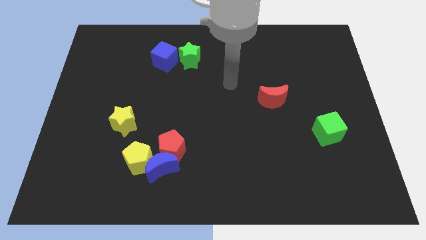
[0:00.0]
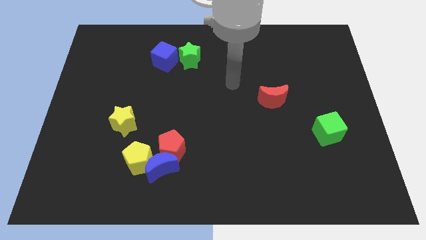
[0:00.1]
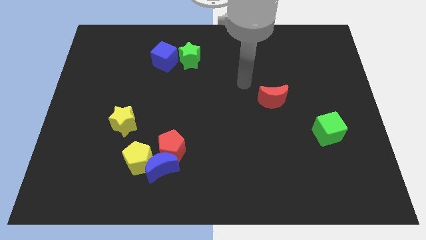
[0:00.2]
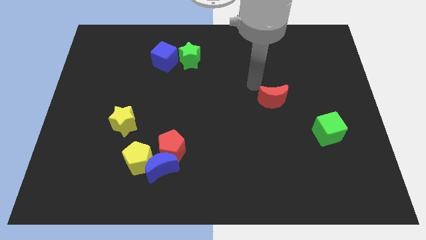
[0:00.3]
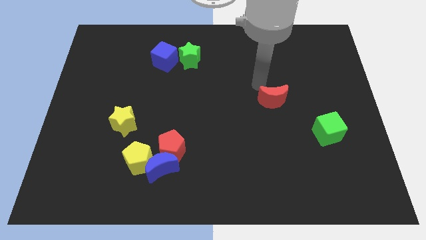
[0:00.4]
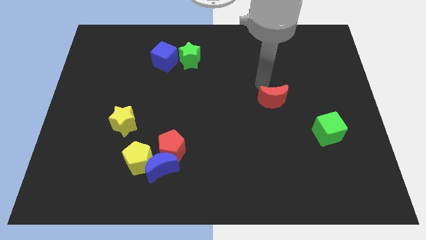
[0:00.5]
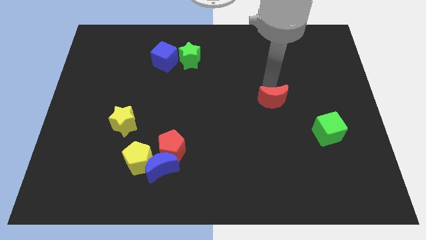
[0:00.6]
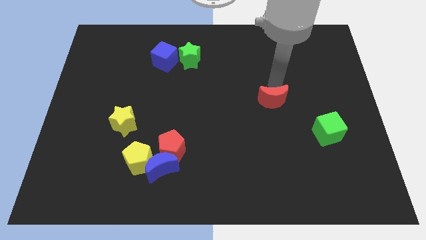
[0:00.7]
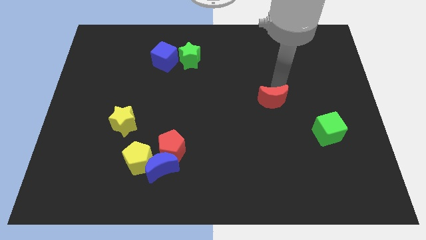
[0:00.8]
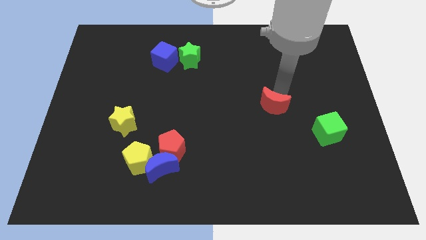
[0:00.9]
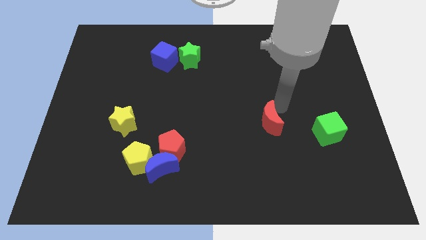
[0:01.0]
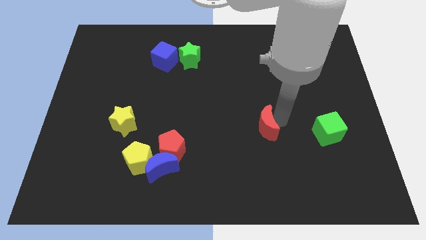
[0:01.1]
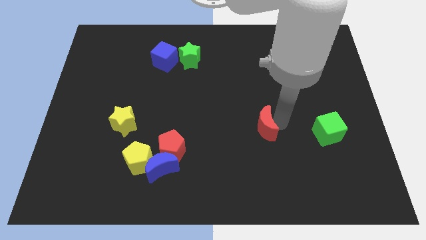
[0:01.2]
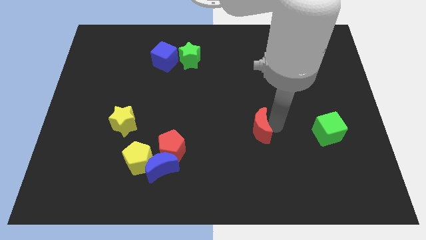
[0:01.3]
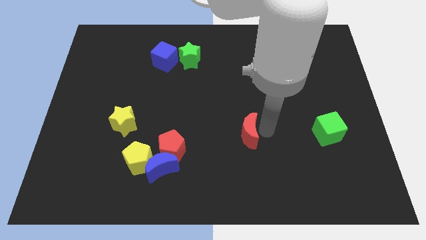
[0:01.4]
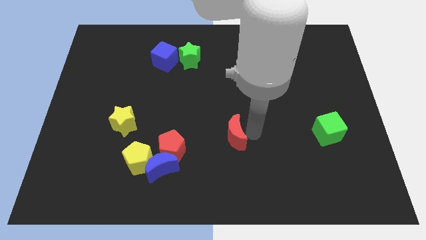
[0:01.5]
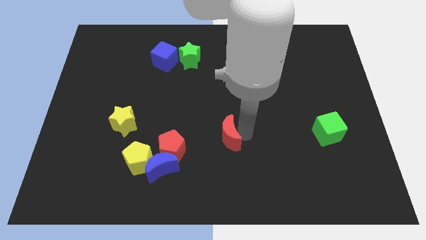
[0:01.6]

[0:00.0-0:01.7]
place the red moon parallel to green cube

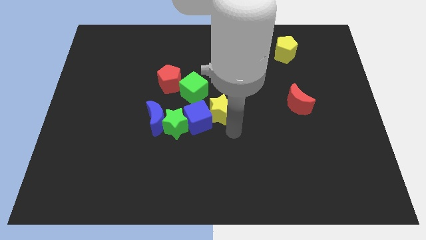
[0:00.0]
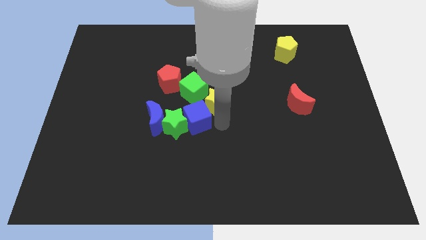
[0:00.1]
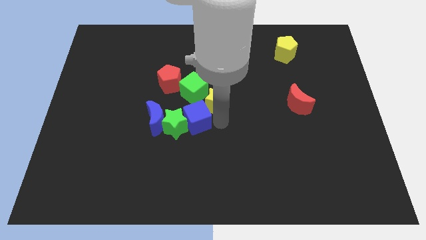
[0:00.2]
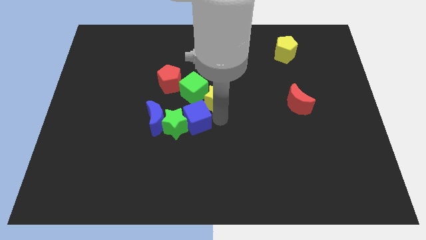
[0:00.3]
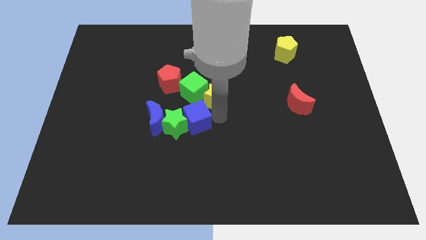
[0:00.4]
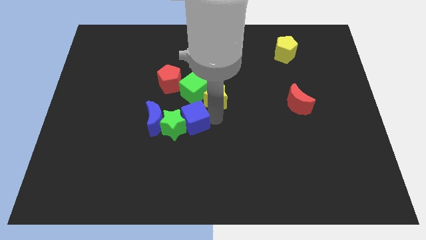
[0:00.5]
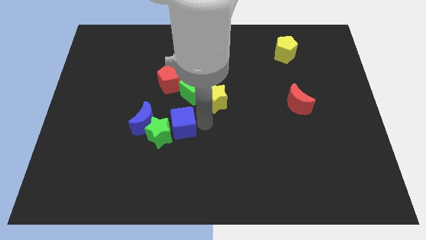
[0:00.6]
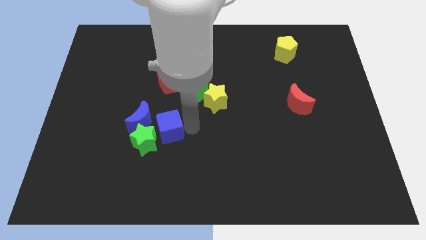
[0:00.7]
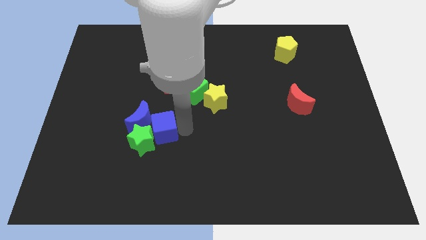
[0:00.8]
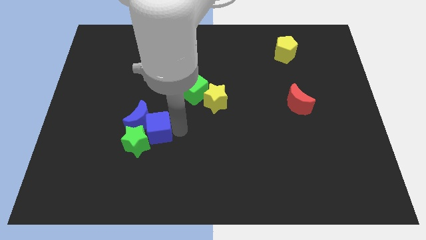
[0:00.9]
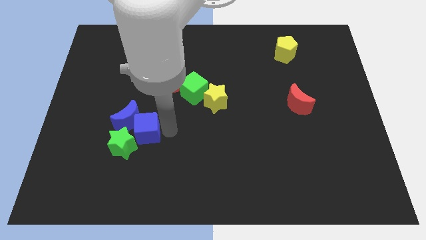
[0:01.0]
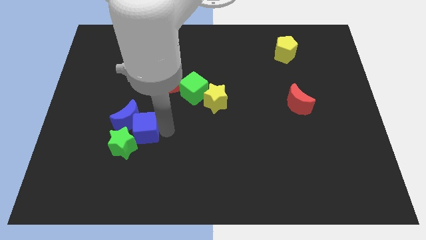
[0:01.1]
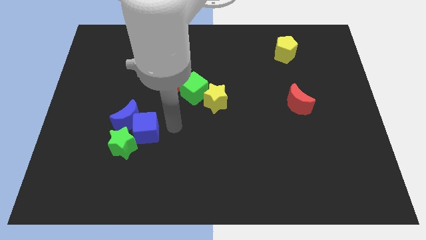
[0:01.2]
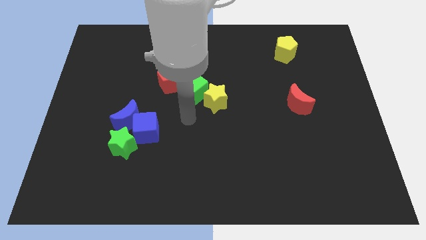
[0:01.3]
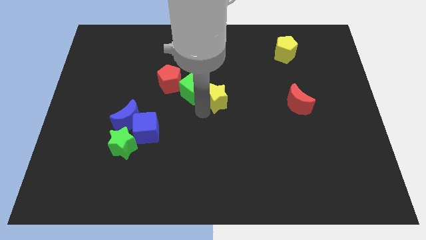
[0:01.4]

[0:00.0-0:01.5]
push the blue blocks and the green star towards the bottom left

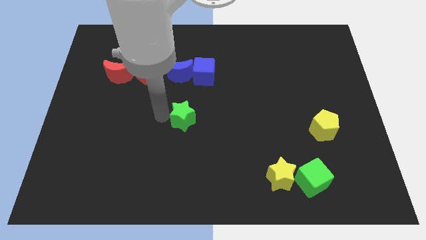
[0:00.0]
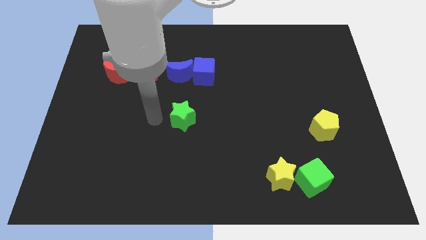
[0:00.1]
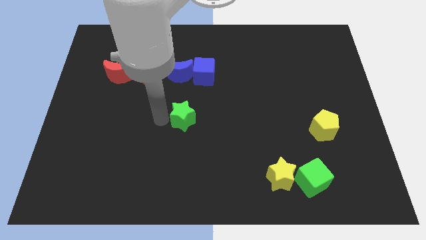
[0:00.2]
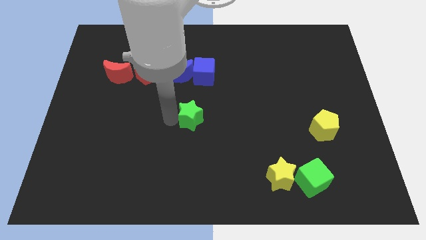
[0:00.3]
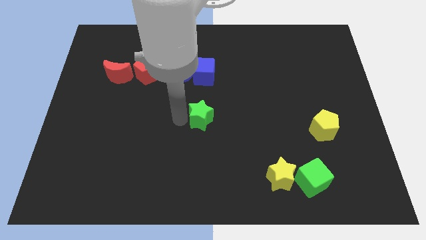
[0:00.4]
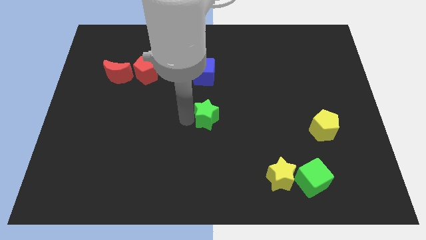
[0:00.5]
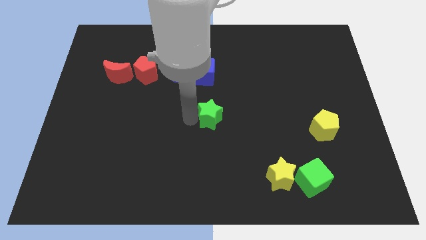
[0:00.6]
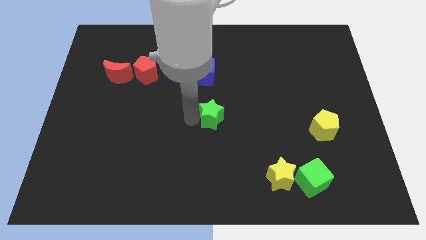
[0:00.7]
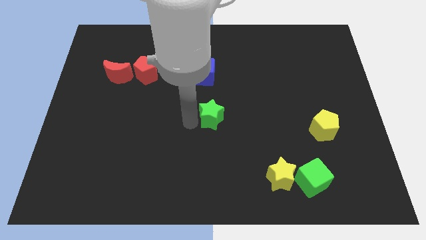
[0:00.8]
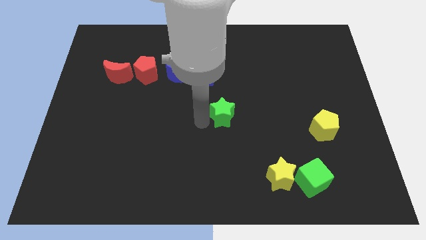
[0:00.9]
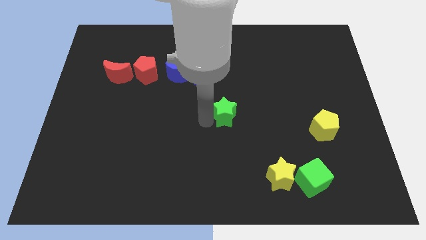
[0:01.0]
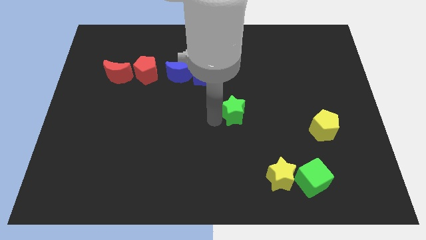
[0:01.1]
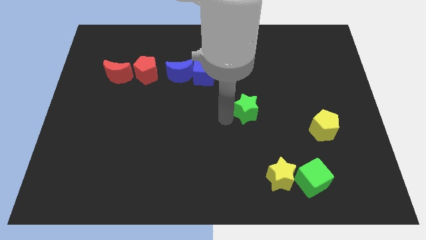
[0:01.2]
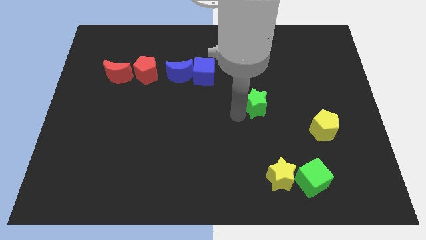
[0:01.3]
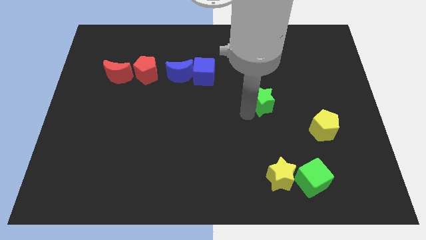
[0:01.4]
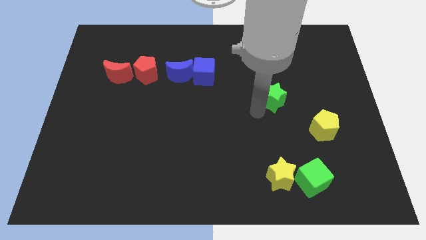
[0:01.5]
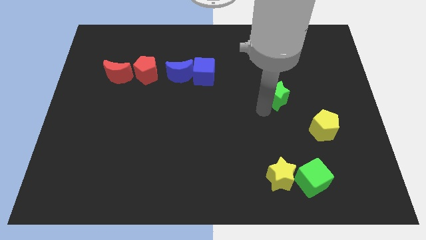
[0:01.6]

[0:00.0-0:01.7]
place the green star vertically above the yellow star

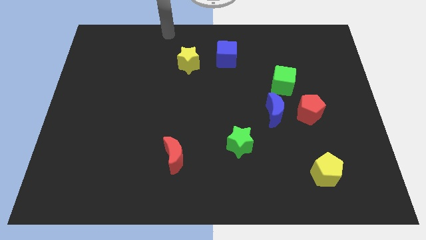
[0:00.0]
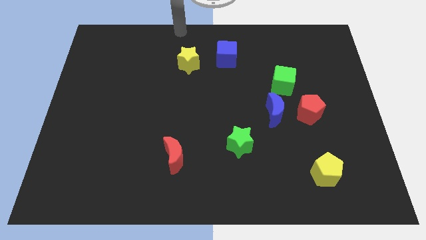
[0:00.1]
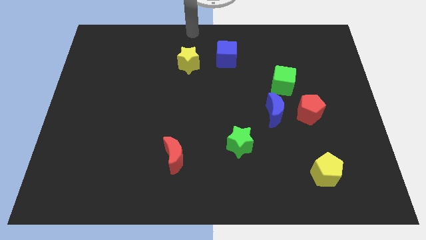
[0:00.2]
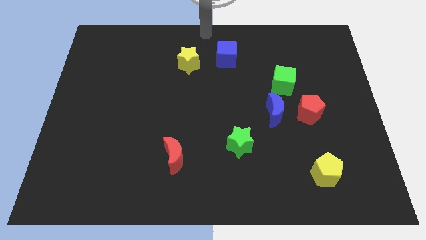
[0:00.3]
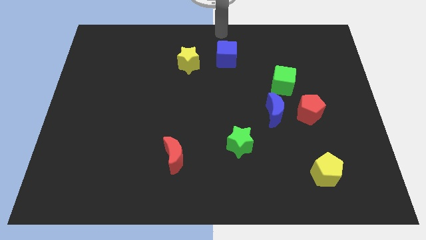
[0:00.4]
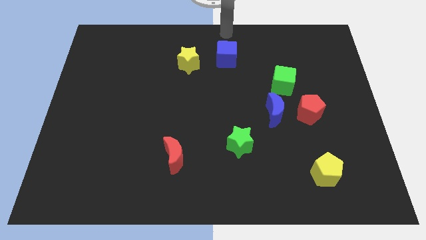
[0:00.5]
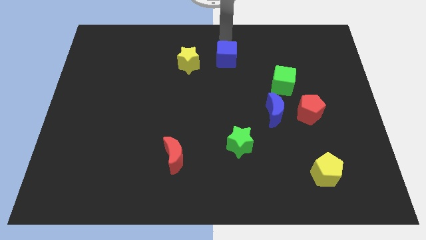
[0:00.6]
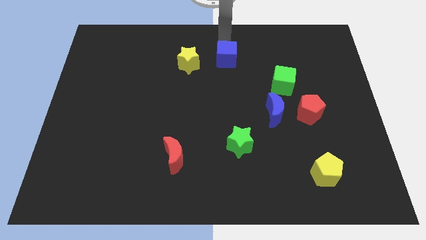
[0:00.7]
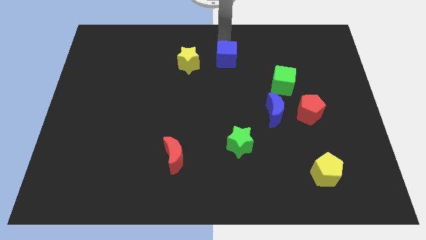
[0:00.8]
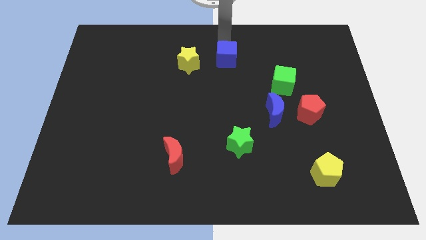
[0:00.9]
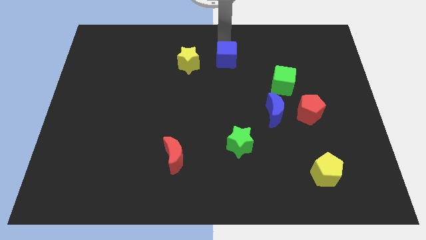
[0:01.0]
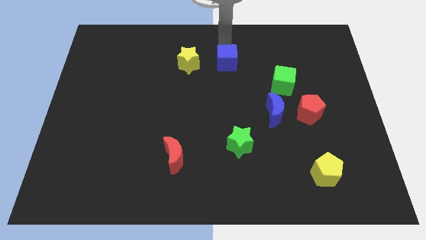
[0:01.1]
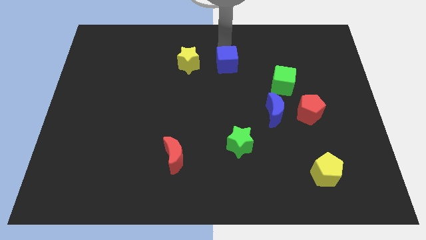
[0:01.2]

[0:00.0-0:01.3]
touch on the top of blue cube

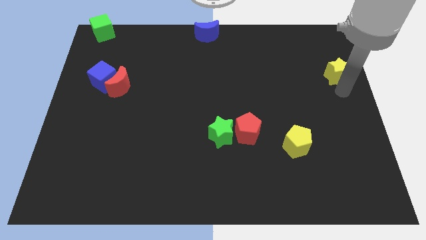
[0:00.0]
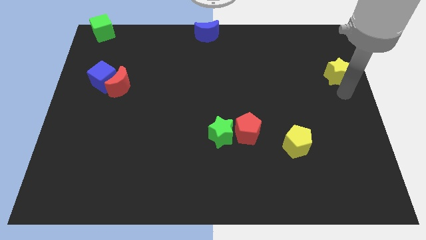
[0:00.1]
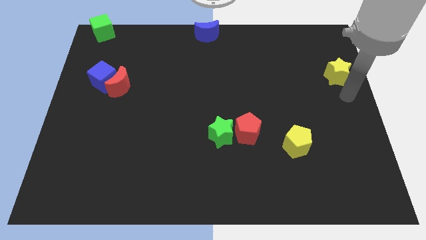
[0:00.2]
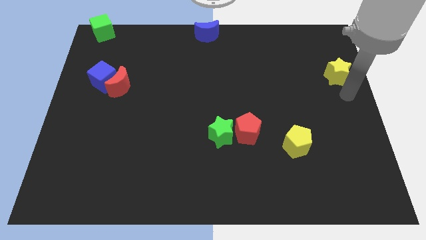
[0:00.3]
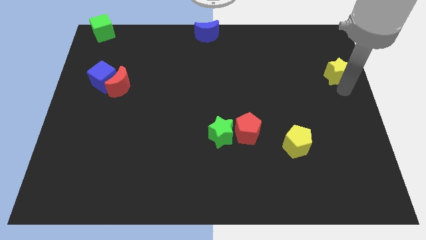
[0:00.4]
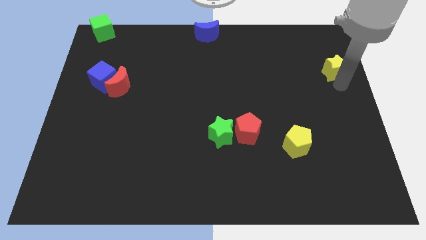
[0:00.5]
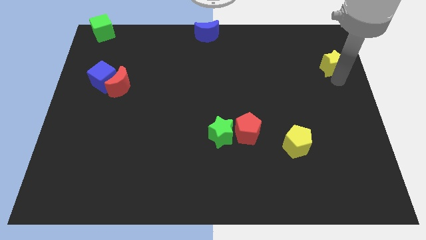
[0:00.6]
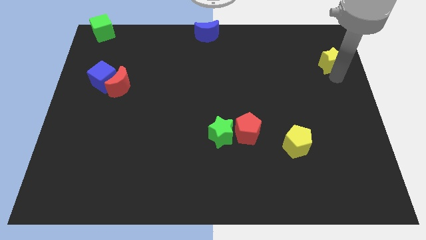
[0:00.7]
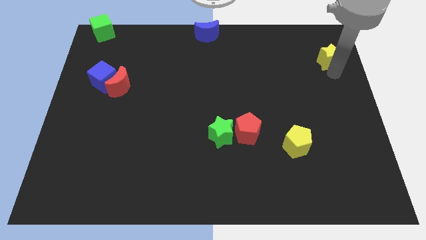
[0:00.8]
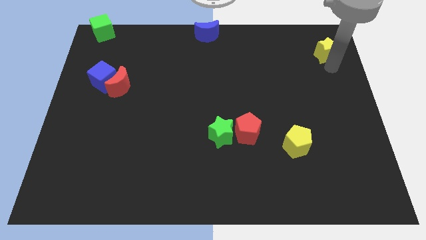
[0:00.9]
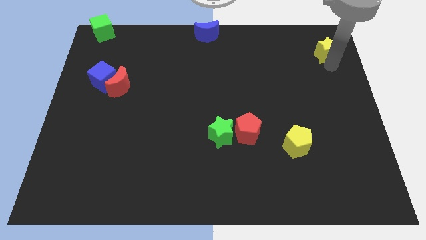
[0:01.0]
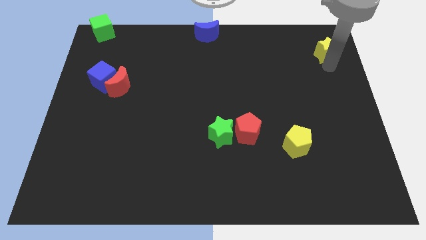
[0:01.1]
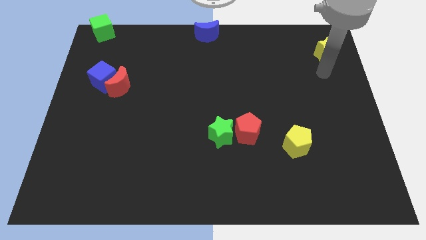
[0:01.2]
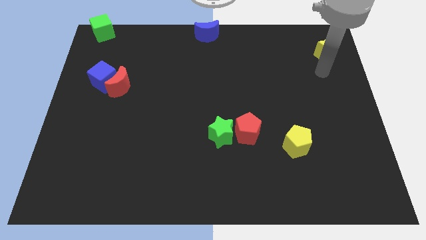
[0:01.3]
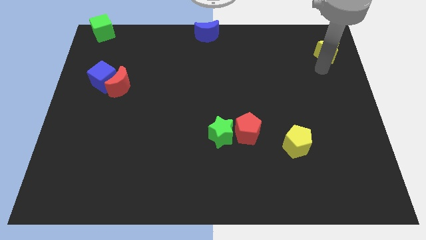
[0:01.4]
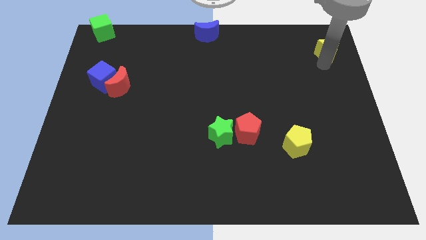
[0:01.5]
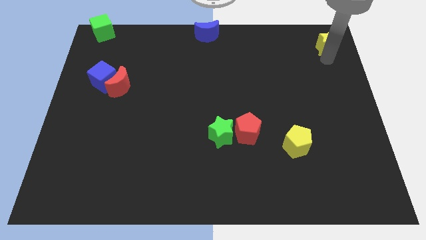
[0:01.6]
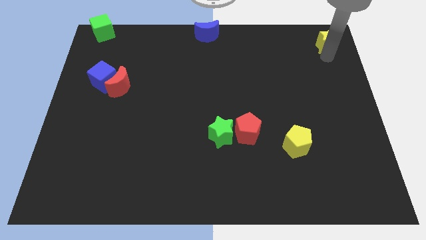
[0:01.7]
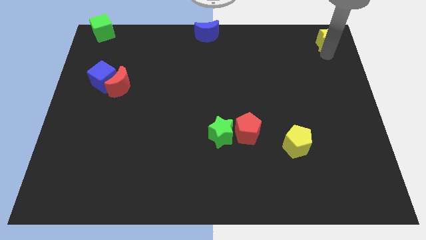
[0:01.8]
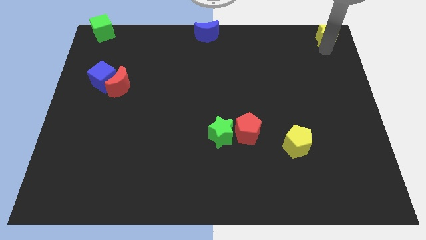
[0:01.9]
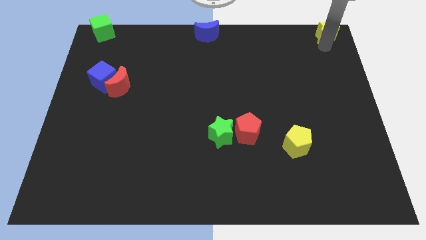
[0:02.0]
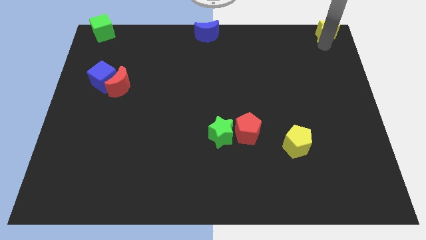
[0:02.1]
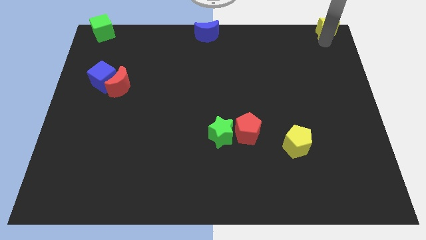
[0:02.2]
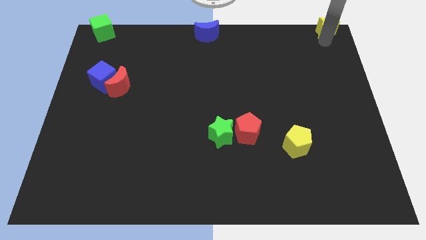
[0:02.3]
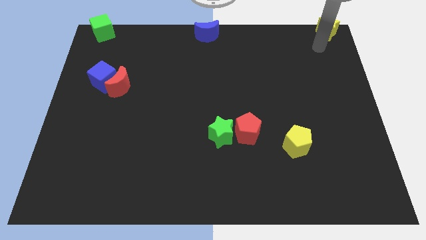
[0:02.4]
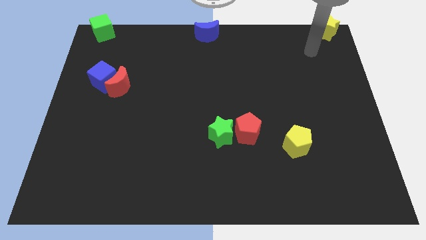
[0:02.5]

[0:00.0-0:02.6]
move the yellow star to the top right corner
